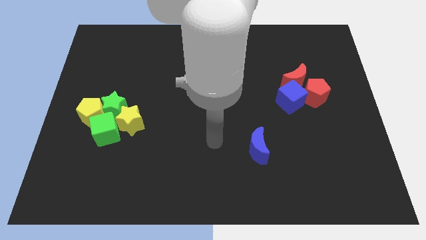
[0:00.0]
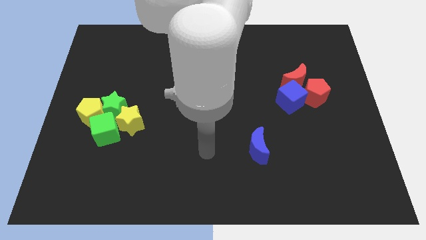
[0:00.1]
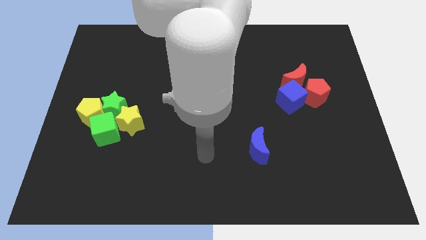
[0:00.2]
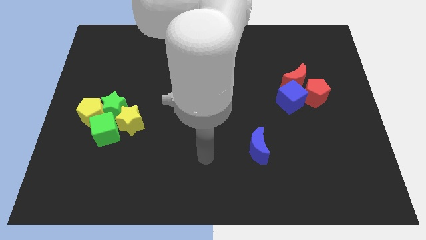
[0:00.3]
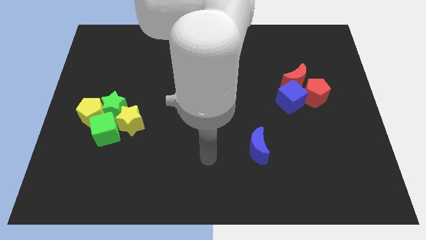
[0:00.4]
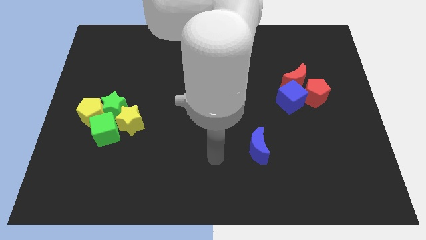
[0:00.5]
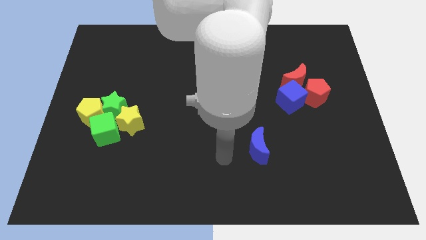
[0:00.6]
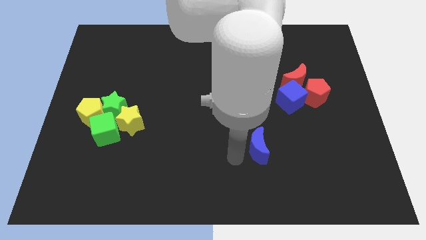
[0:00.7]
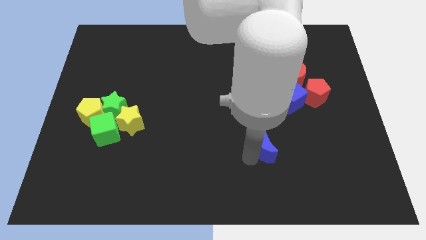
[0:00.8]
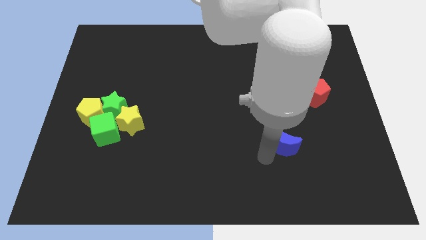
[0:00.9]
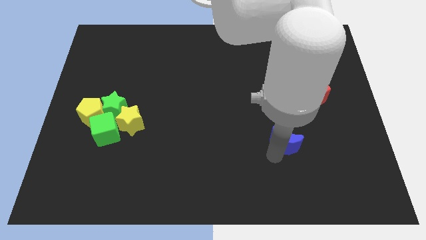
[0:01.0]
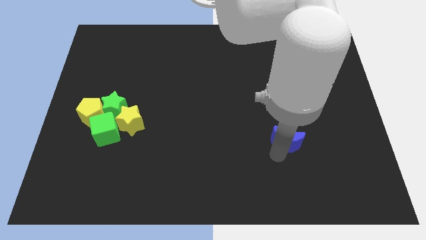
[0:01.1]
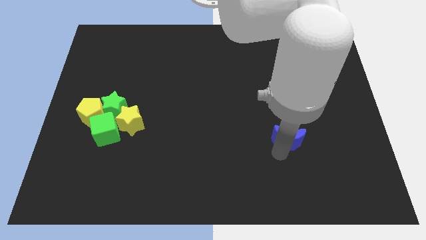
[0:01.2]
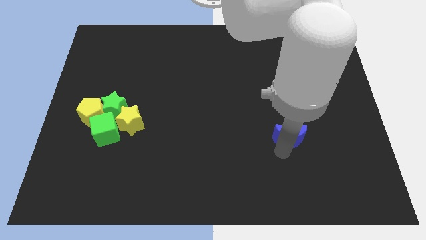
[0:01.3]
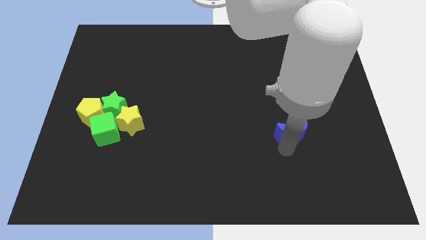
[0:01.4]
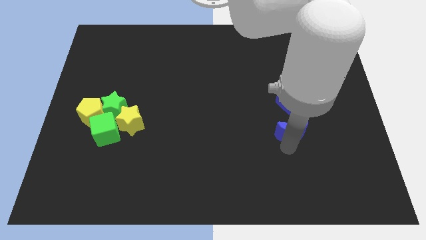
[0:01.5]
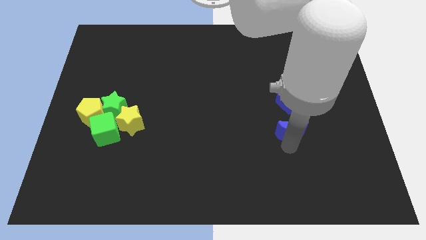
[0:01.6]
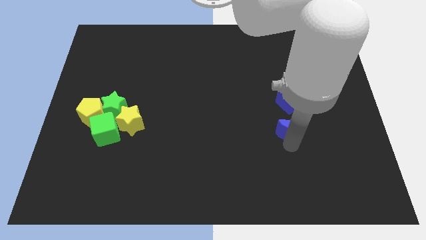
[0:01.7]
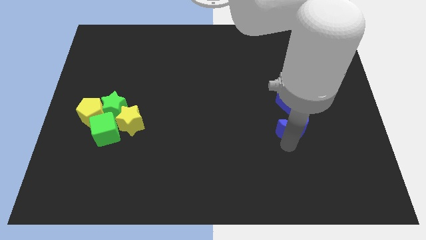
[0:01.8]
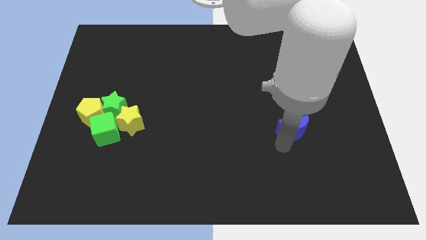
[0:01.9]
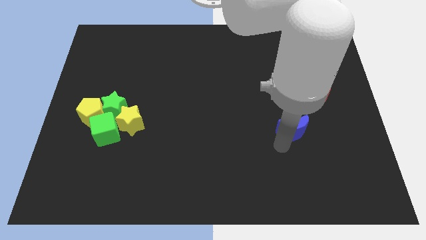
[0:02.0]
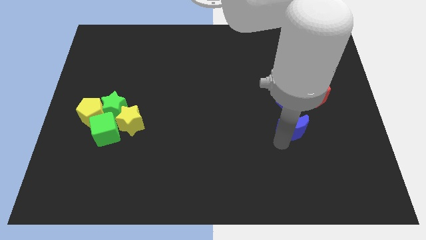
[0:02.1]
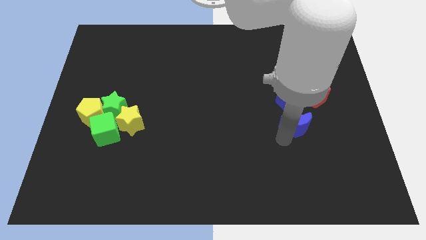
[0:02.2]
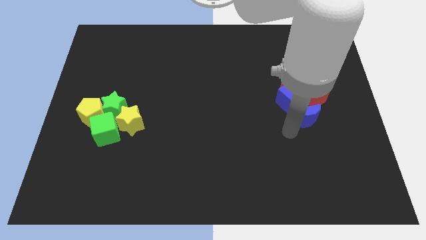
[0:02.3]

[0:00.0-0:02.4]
push the blue moon into the group of the objects

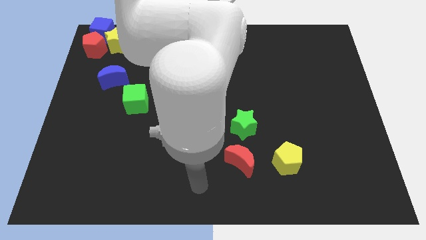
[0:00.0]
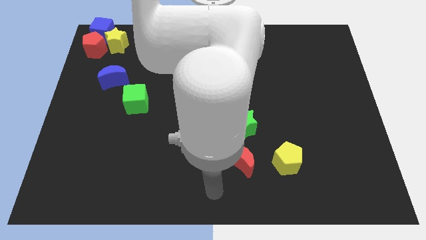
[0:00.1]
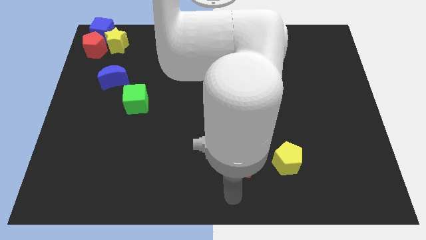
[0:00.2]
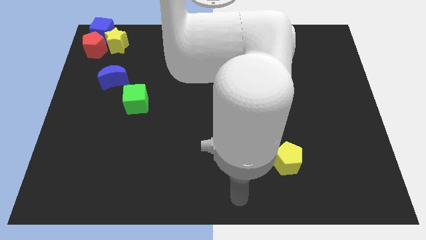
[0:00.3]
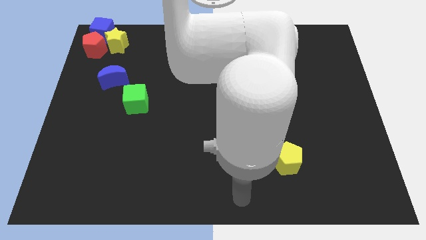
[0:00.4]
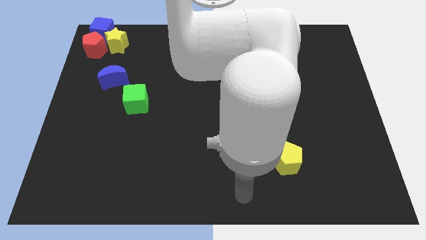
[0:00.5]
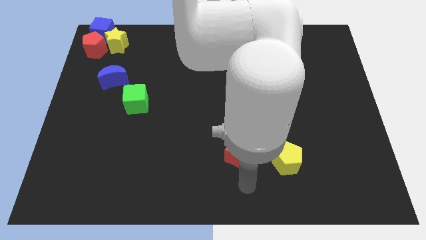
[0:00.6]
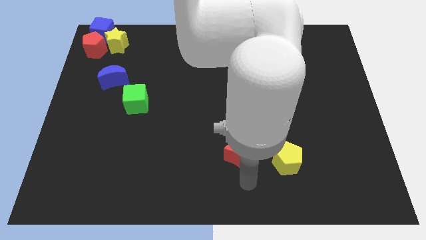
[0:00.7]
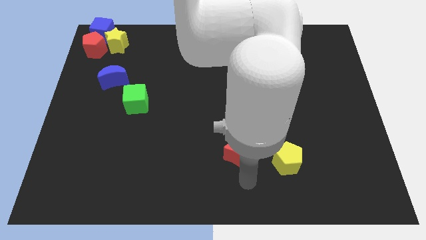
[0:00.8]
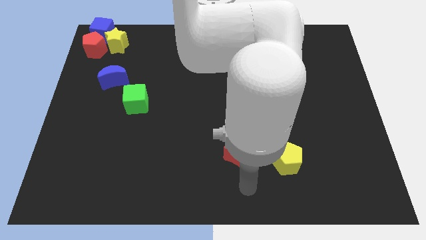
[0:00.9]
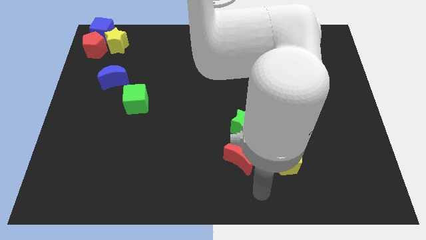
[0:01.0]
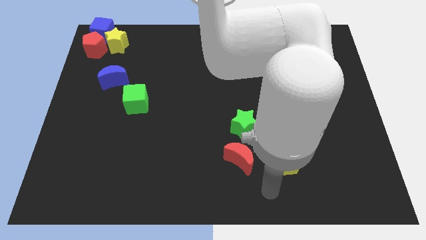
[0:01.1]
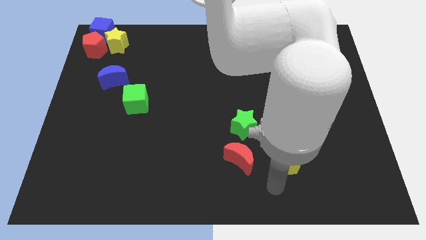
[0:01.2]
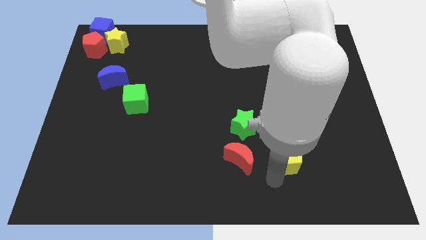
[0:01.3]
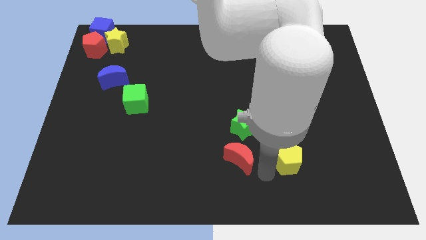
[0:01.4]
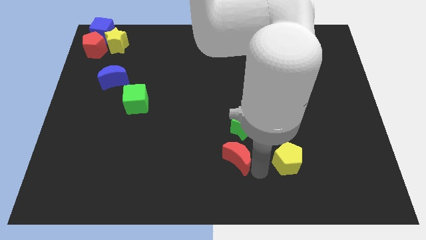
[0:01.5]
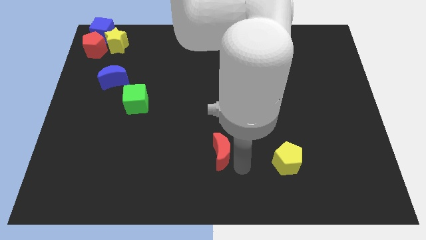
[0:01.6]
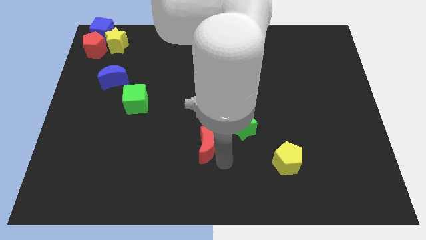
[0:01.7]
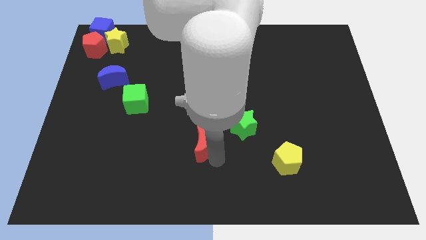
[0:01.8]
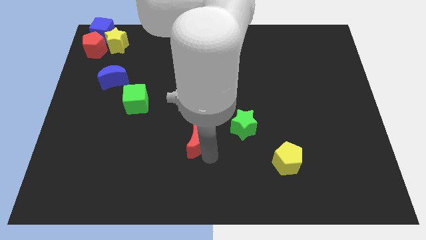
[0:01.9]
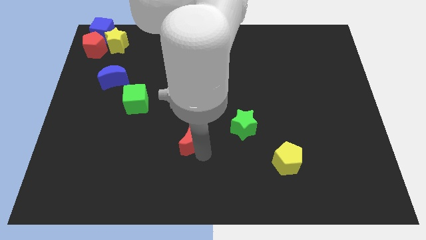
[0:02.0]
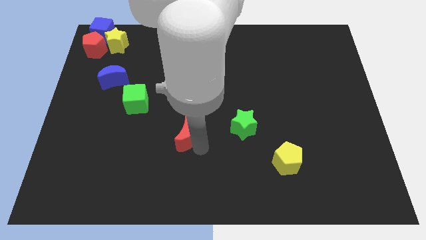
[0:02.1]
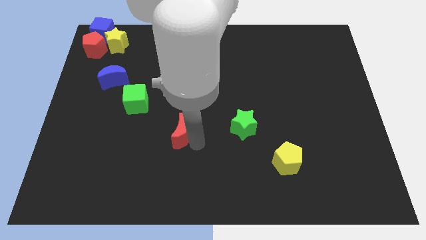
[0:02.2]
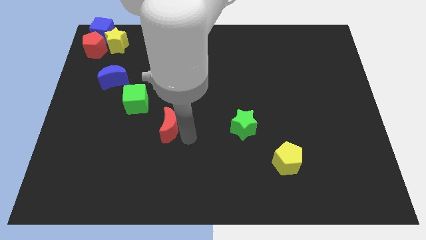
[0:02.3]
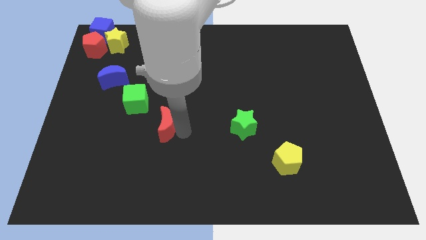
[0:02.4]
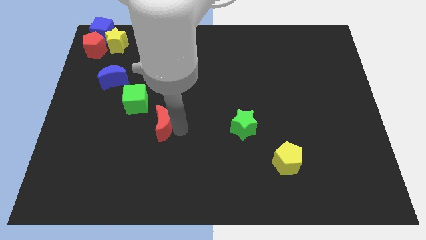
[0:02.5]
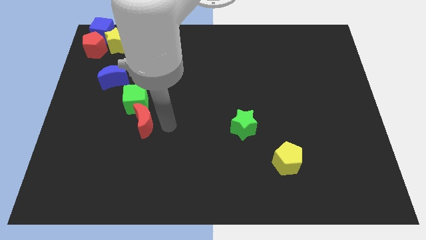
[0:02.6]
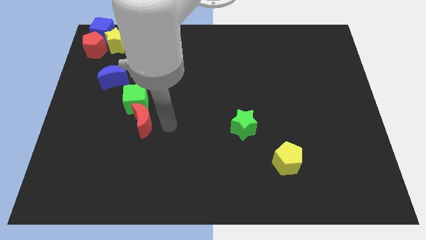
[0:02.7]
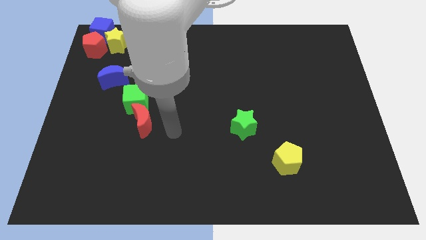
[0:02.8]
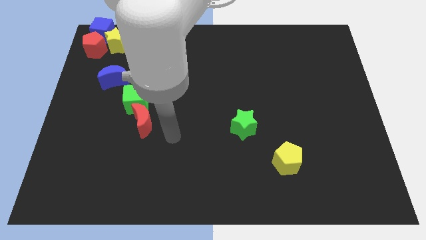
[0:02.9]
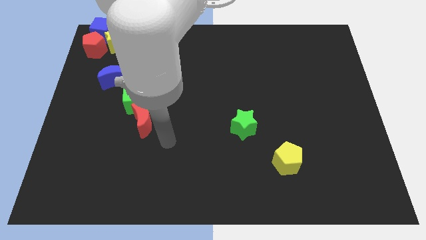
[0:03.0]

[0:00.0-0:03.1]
move the red crescent at the bottom of the green cube

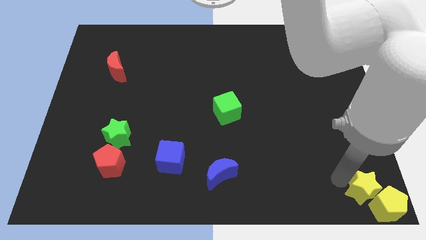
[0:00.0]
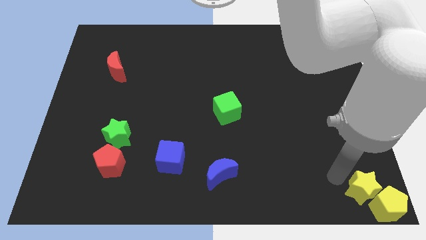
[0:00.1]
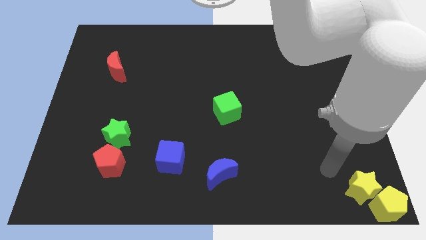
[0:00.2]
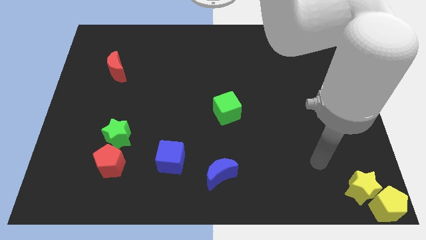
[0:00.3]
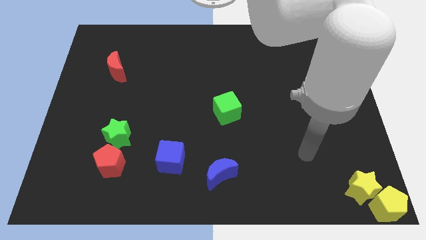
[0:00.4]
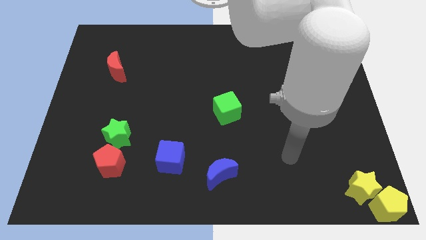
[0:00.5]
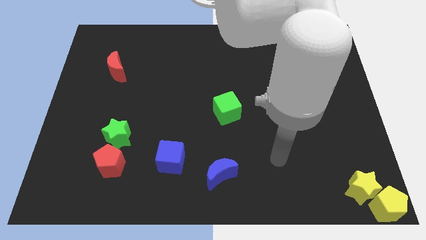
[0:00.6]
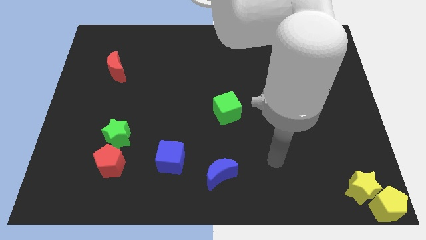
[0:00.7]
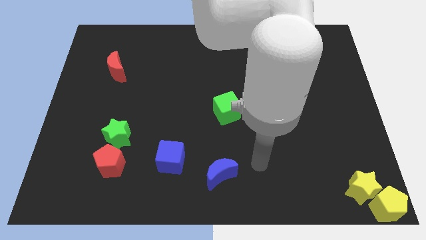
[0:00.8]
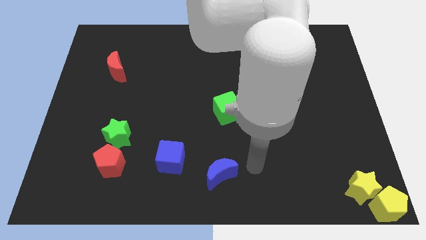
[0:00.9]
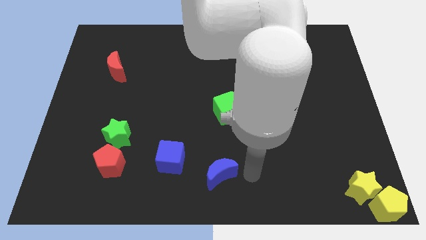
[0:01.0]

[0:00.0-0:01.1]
point your arm to the right side of blue moon

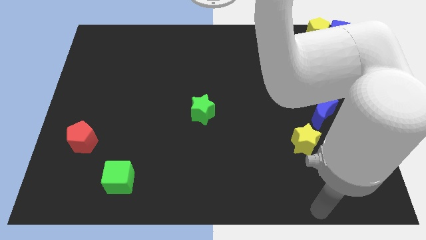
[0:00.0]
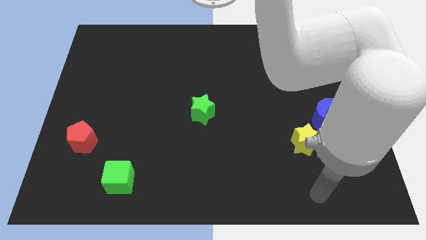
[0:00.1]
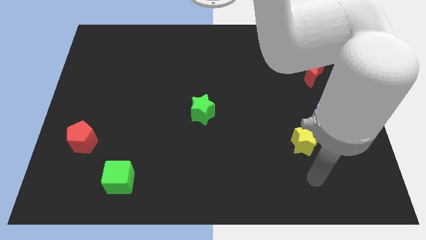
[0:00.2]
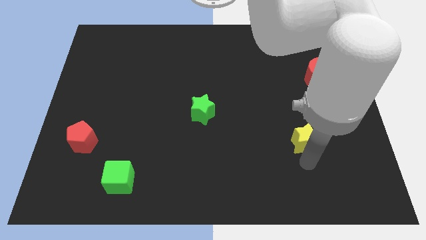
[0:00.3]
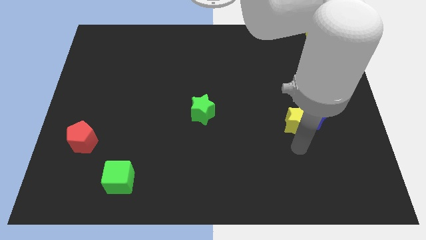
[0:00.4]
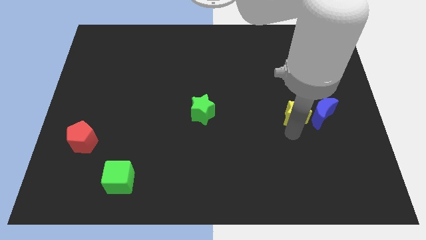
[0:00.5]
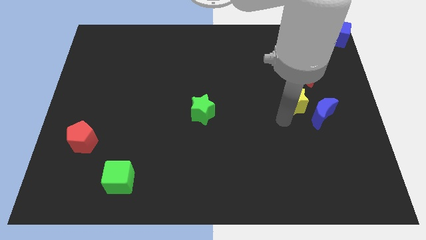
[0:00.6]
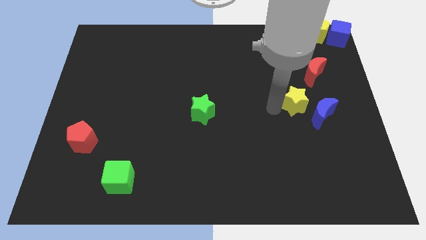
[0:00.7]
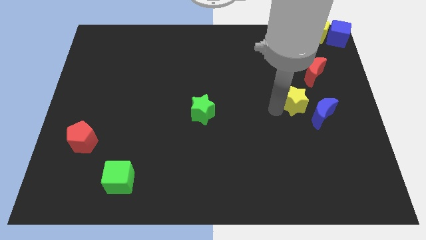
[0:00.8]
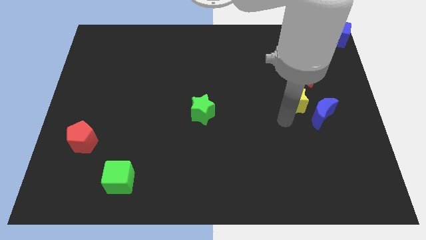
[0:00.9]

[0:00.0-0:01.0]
move the yellow star diagonally upwards

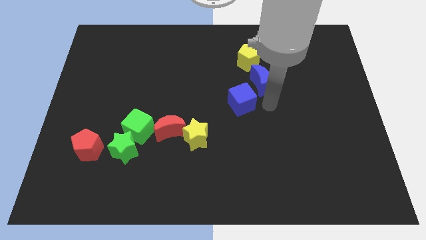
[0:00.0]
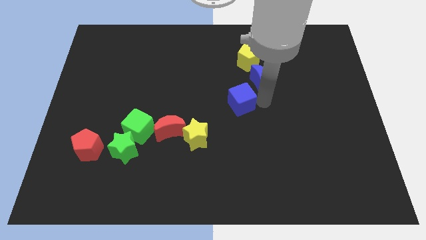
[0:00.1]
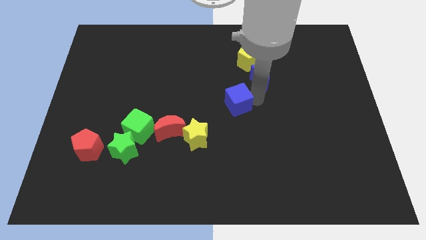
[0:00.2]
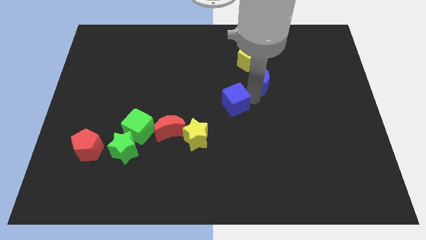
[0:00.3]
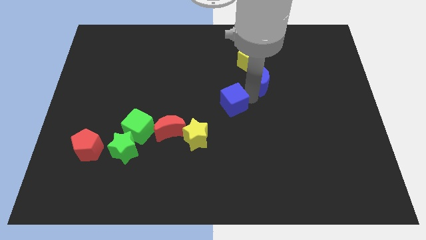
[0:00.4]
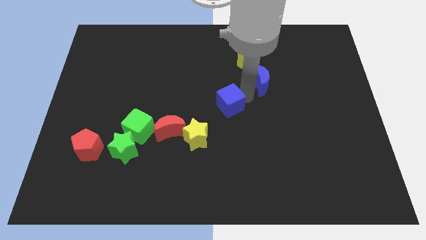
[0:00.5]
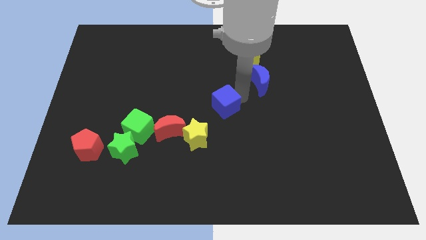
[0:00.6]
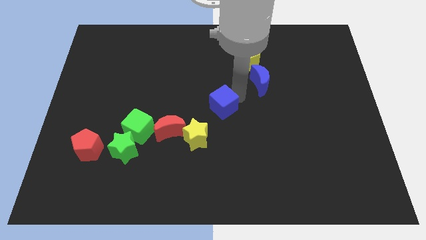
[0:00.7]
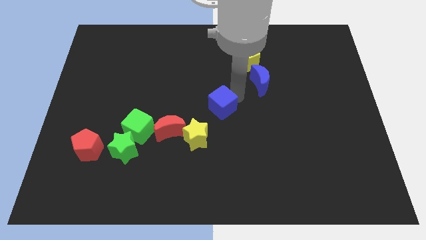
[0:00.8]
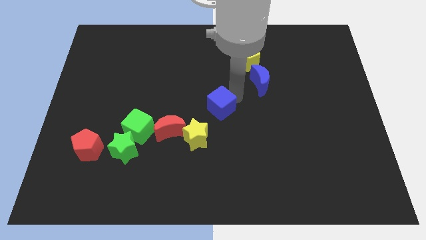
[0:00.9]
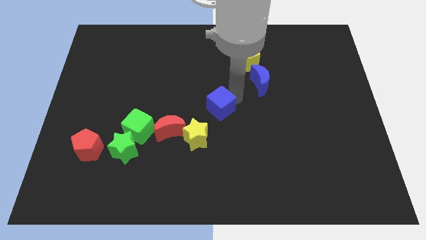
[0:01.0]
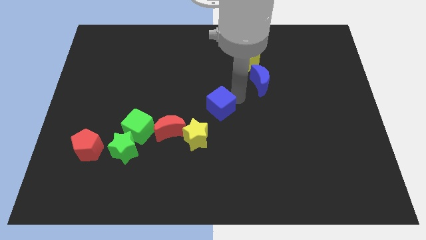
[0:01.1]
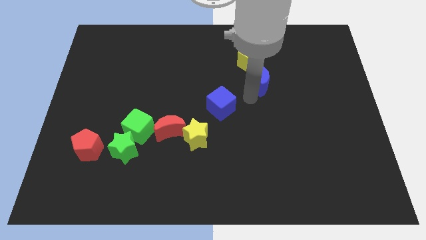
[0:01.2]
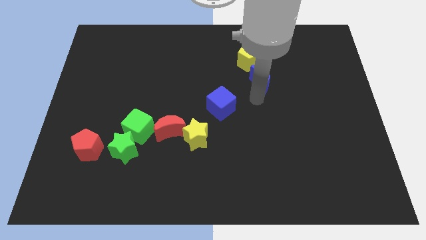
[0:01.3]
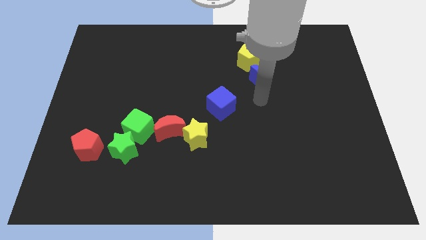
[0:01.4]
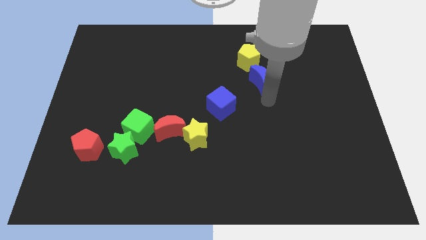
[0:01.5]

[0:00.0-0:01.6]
place the blue cube at the center of the board
